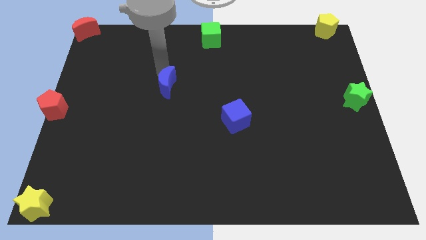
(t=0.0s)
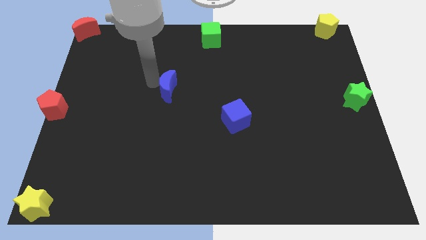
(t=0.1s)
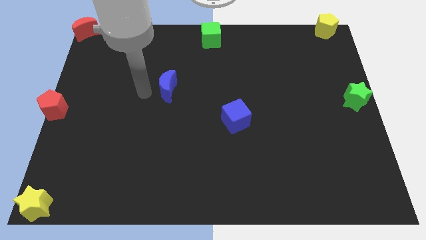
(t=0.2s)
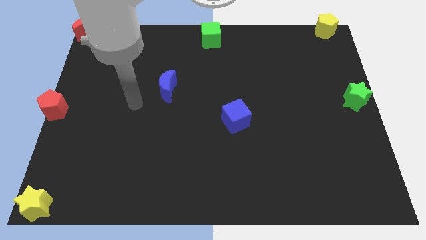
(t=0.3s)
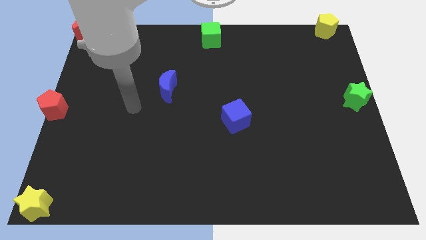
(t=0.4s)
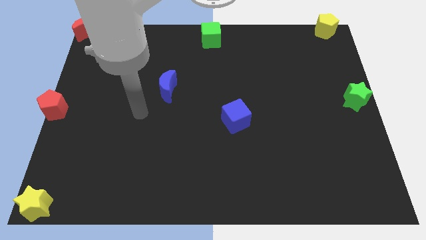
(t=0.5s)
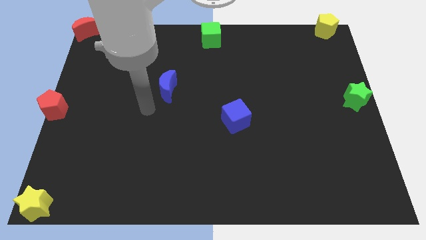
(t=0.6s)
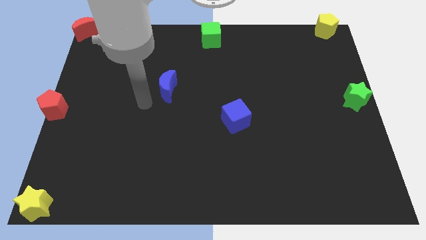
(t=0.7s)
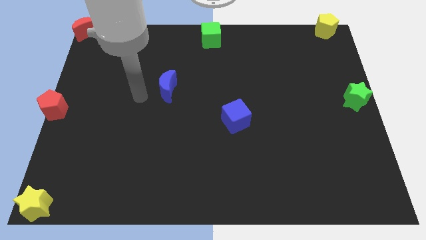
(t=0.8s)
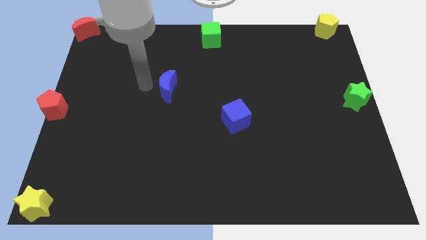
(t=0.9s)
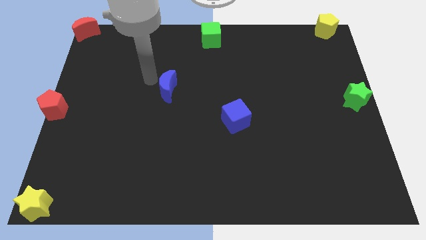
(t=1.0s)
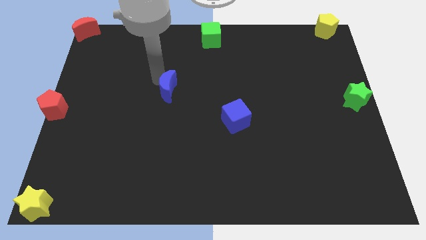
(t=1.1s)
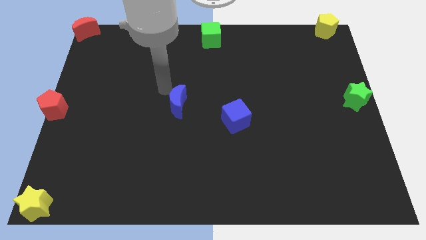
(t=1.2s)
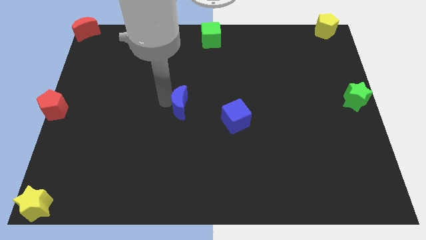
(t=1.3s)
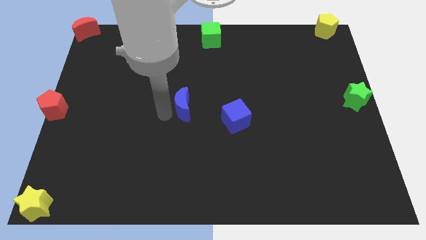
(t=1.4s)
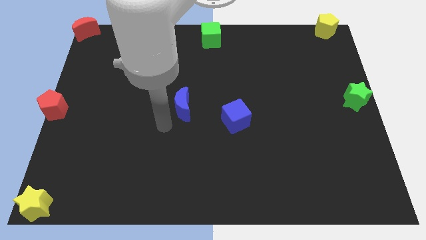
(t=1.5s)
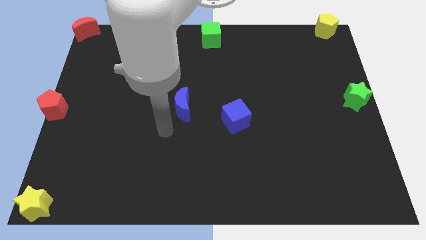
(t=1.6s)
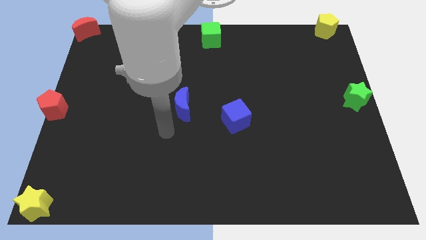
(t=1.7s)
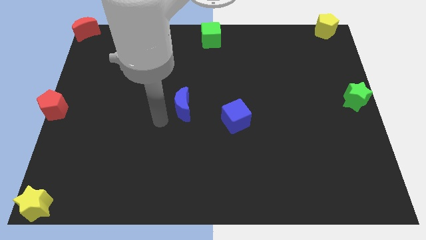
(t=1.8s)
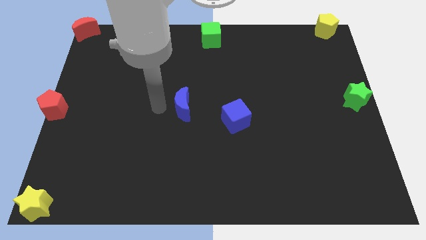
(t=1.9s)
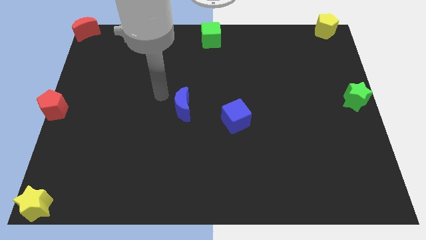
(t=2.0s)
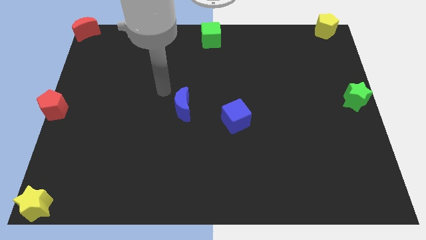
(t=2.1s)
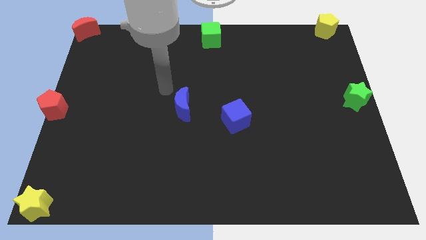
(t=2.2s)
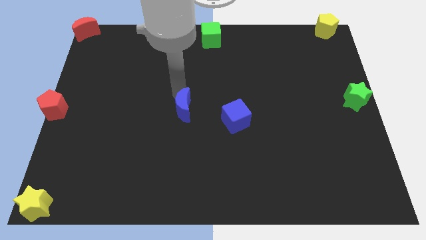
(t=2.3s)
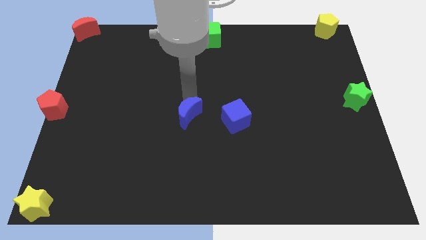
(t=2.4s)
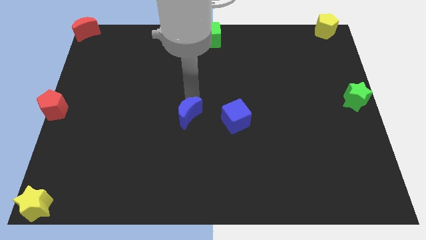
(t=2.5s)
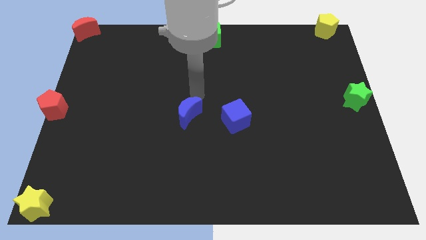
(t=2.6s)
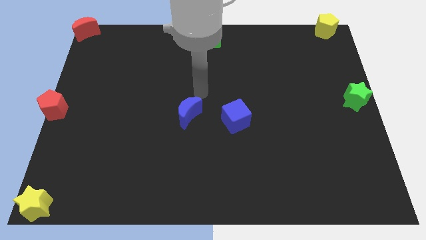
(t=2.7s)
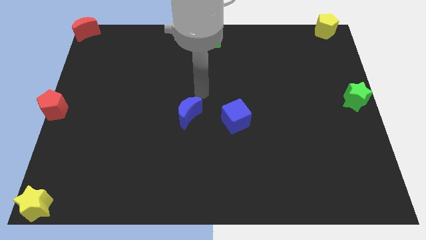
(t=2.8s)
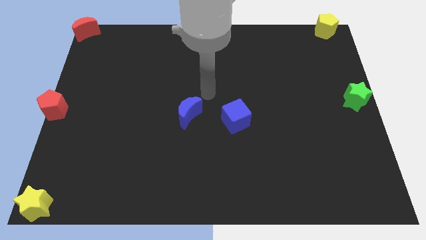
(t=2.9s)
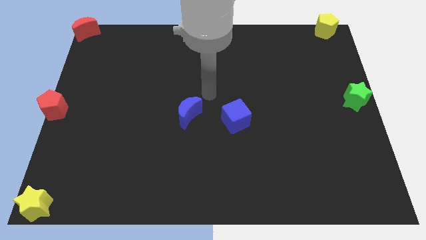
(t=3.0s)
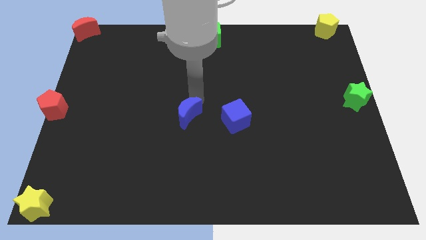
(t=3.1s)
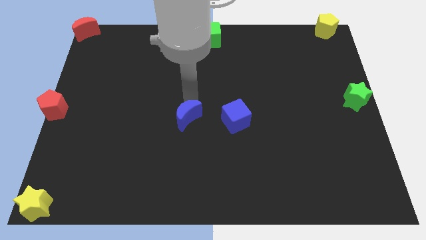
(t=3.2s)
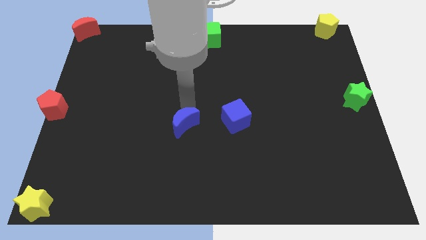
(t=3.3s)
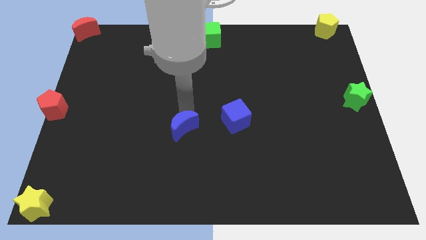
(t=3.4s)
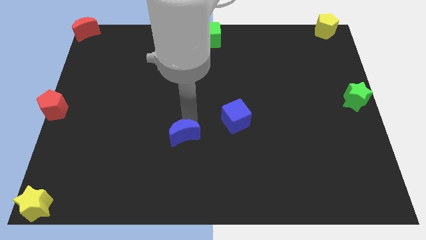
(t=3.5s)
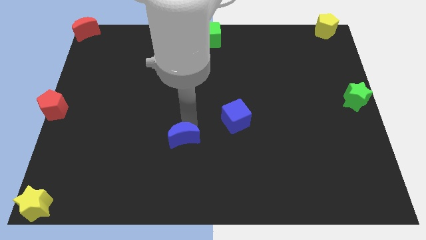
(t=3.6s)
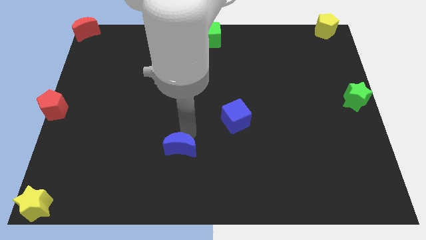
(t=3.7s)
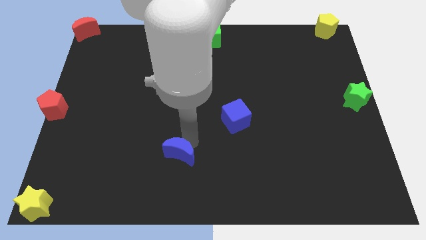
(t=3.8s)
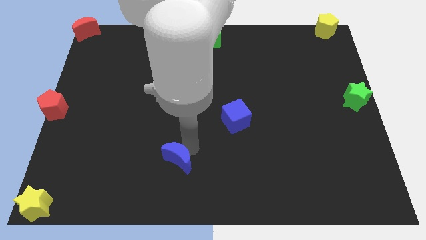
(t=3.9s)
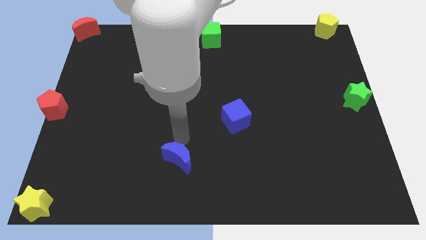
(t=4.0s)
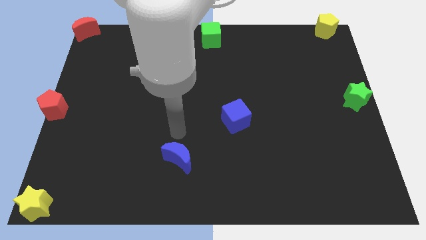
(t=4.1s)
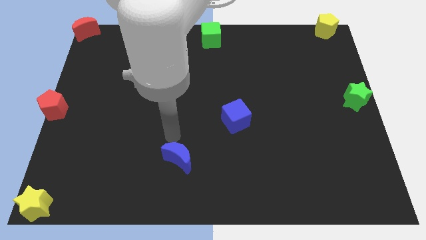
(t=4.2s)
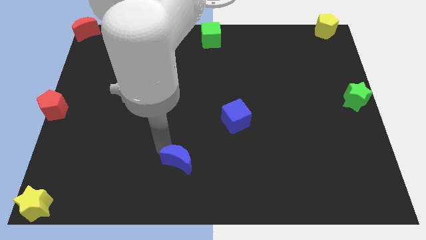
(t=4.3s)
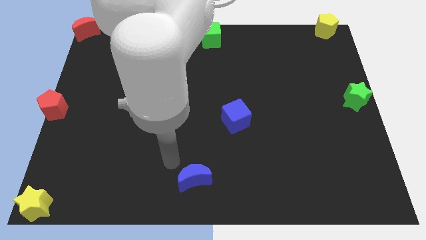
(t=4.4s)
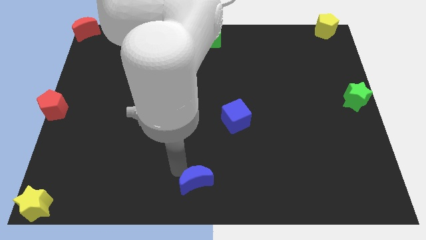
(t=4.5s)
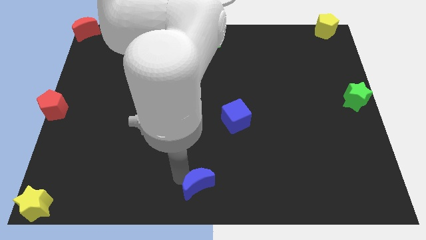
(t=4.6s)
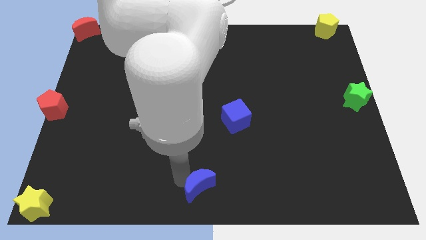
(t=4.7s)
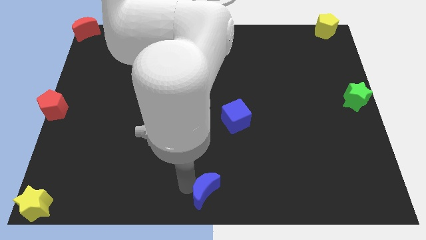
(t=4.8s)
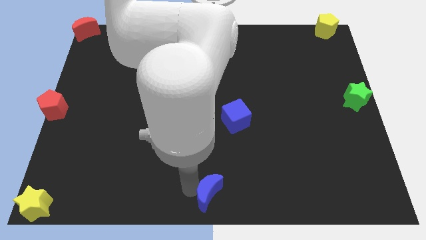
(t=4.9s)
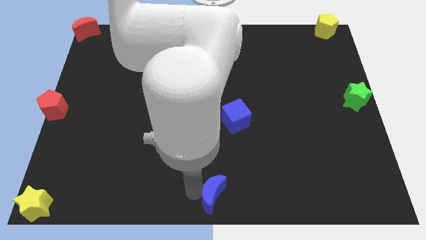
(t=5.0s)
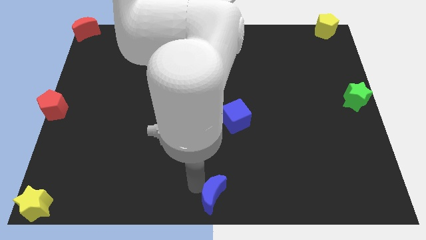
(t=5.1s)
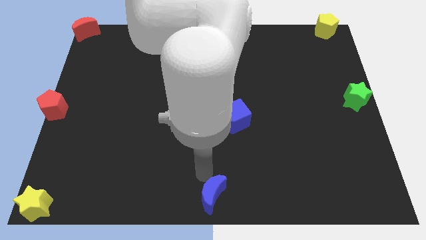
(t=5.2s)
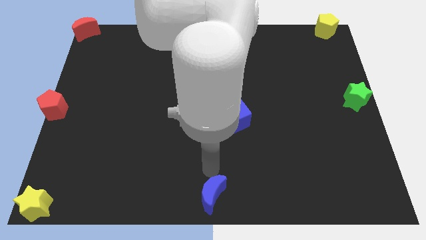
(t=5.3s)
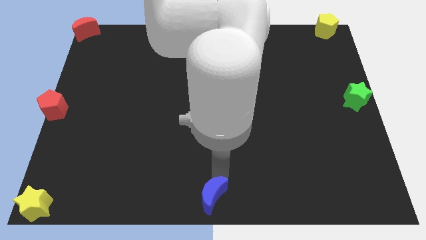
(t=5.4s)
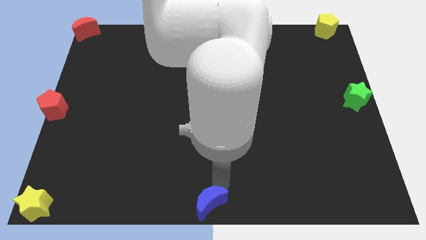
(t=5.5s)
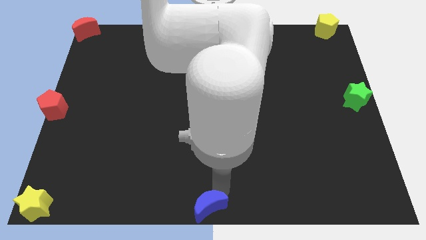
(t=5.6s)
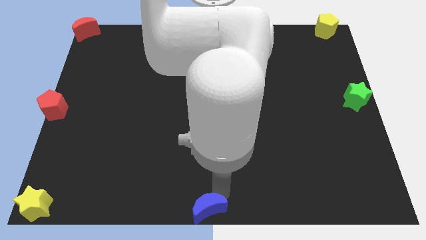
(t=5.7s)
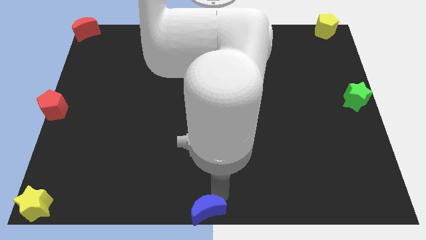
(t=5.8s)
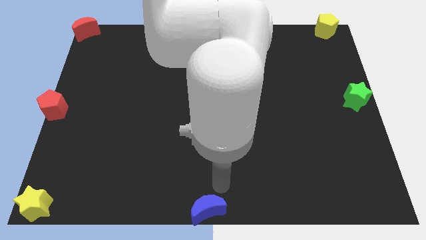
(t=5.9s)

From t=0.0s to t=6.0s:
push the blue crescent towards the bottom centre of the board

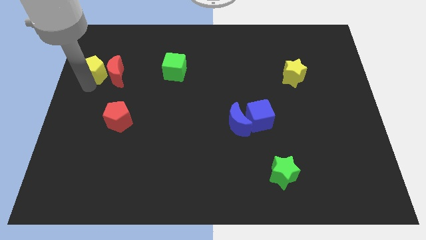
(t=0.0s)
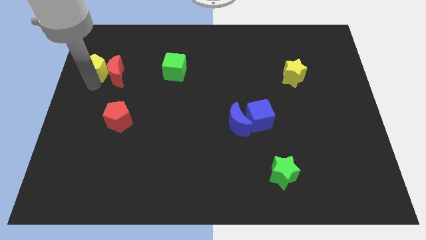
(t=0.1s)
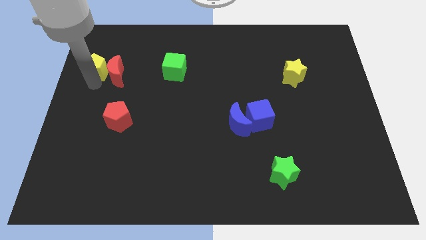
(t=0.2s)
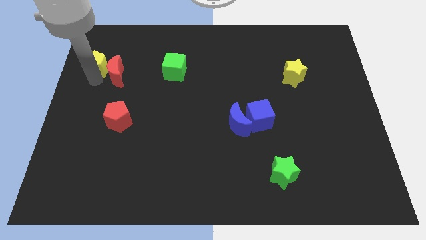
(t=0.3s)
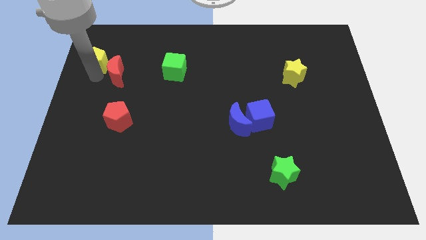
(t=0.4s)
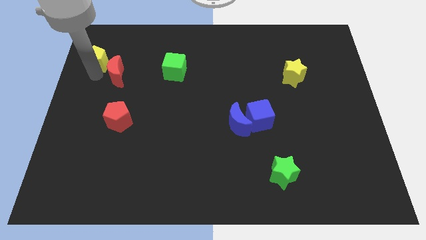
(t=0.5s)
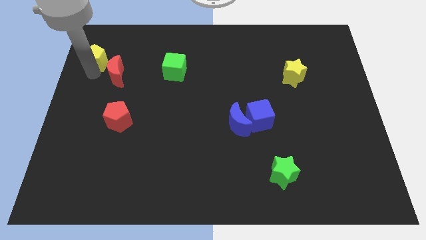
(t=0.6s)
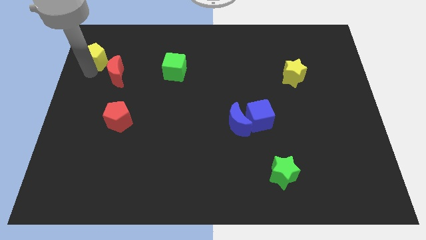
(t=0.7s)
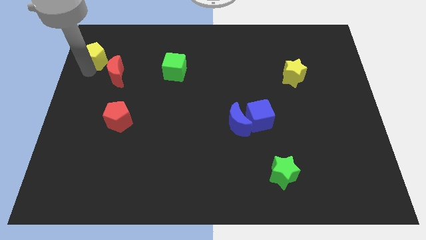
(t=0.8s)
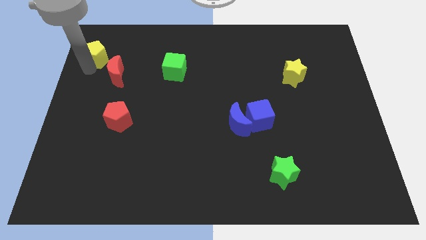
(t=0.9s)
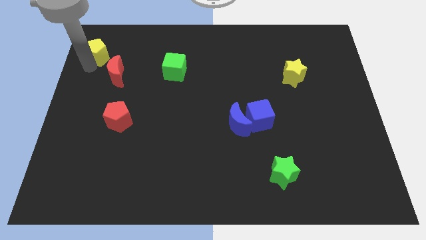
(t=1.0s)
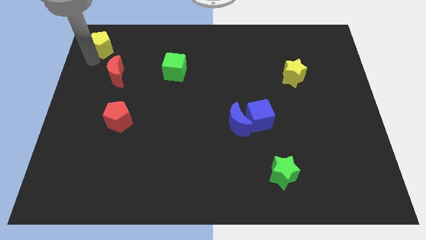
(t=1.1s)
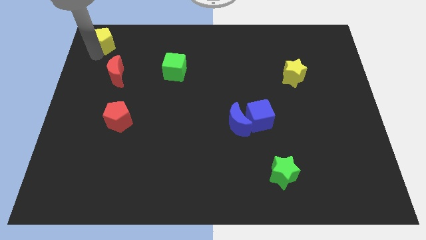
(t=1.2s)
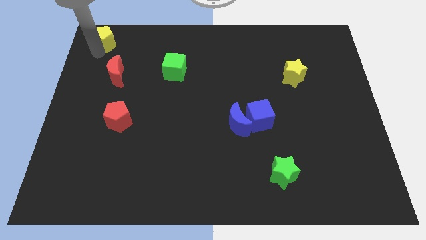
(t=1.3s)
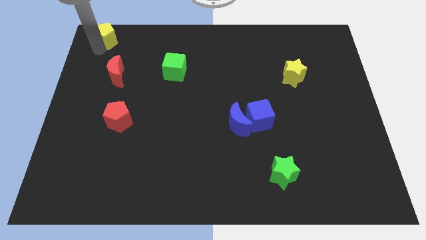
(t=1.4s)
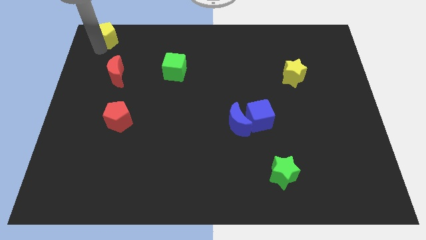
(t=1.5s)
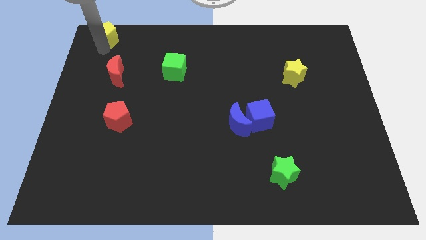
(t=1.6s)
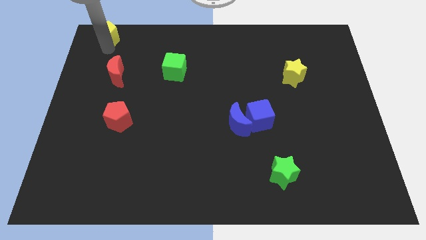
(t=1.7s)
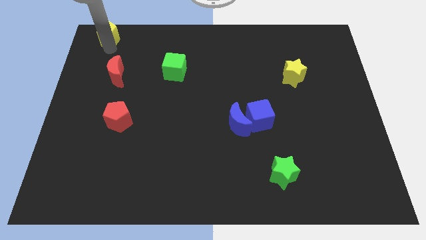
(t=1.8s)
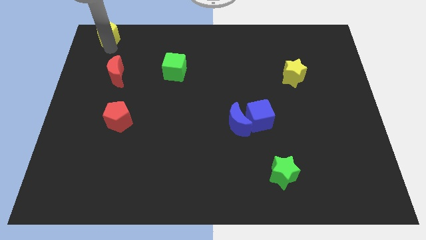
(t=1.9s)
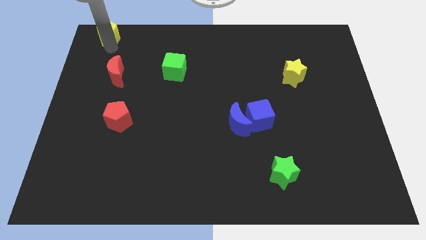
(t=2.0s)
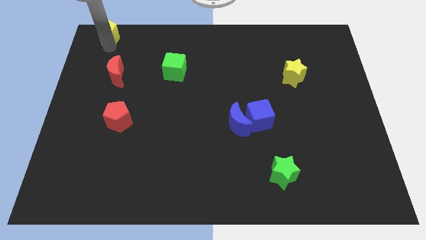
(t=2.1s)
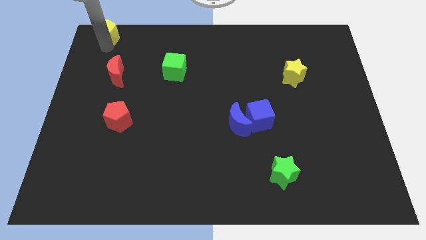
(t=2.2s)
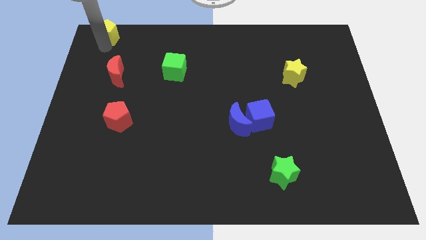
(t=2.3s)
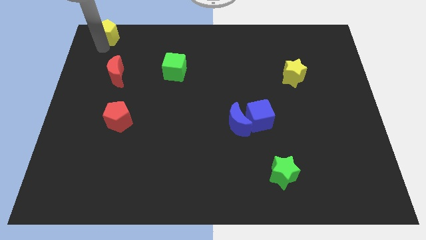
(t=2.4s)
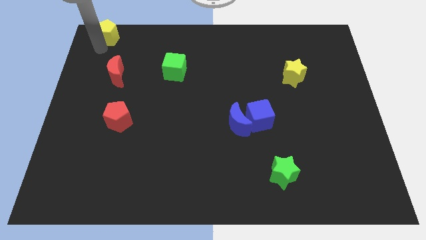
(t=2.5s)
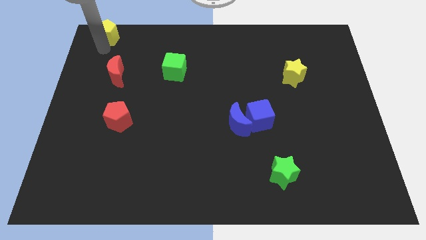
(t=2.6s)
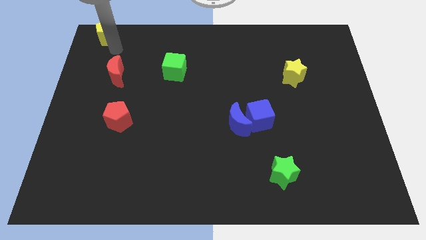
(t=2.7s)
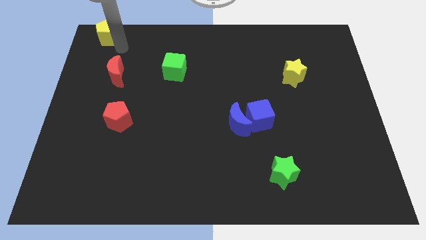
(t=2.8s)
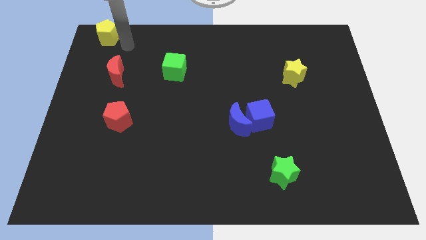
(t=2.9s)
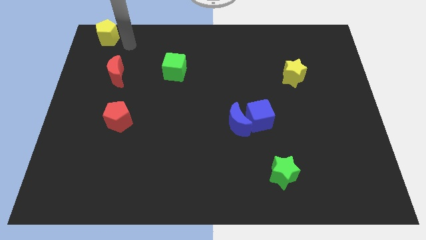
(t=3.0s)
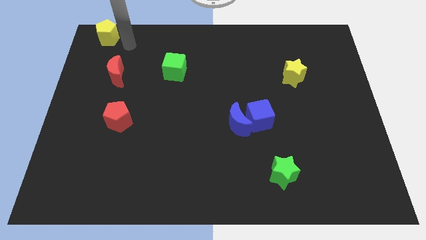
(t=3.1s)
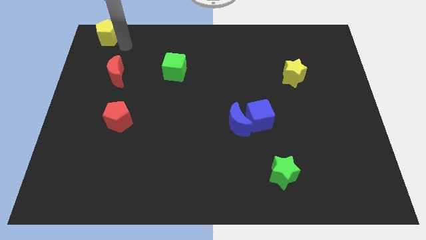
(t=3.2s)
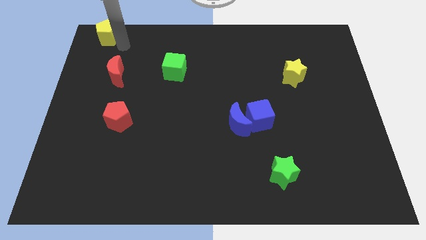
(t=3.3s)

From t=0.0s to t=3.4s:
push the yellow pentagon to the top of the red crescent
